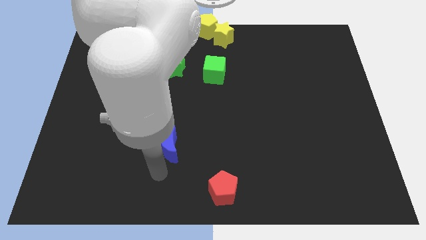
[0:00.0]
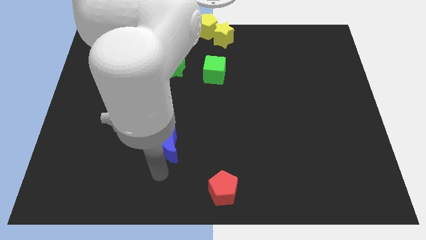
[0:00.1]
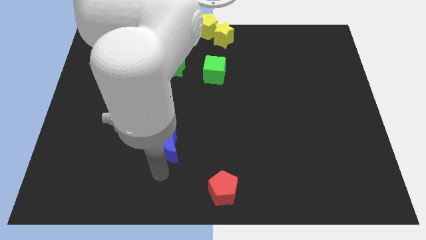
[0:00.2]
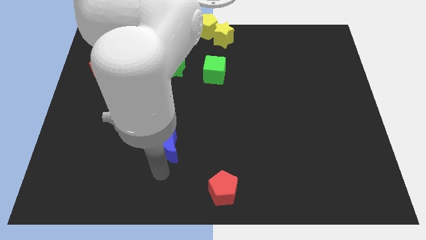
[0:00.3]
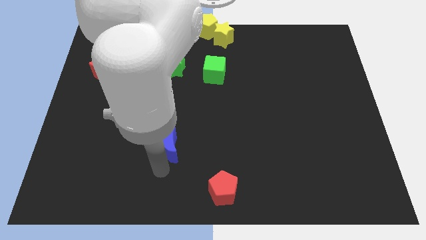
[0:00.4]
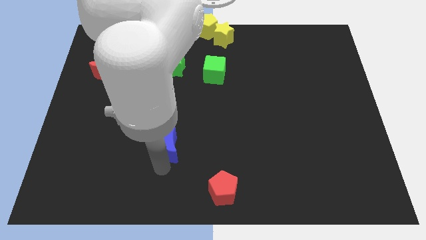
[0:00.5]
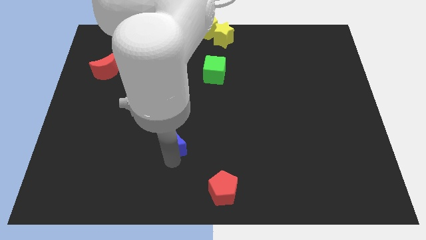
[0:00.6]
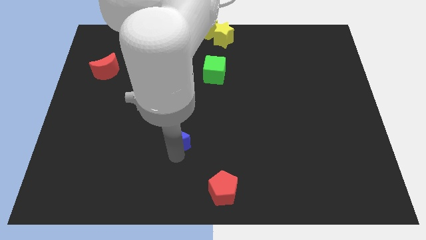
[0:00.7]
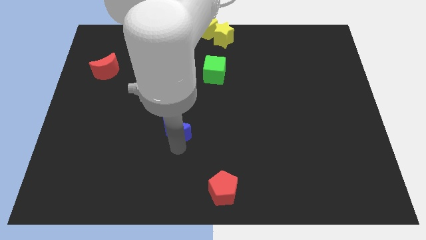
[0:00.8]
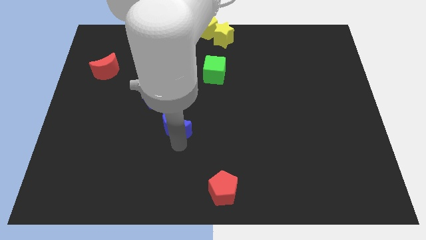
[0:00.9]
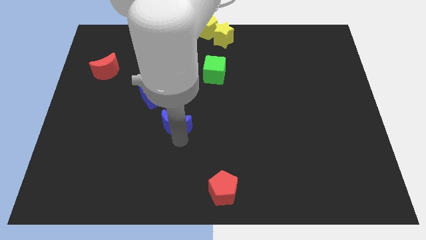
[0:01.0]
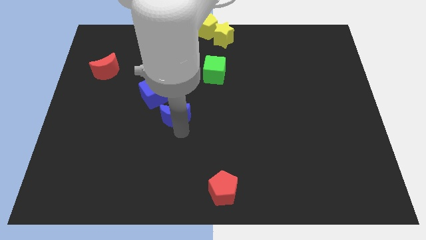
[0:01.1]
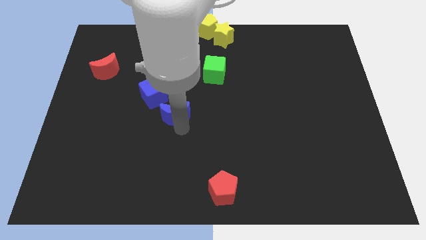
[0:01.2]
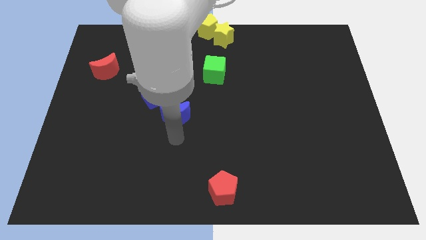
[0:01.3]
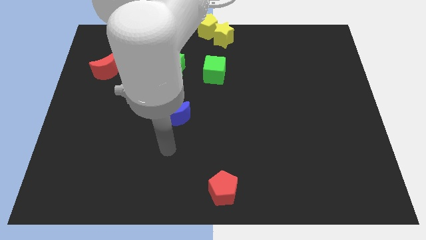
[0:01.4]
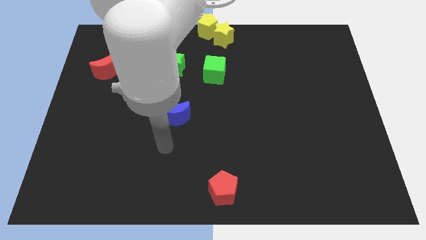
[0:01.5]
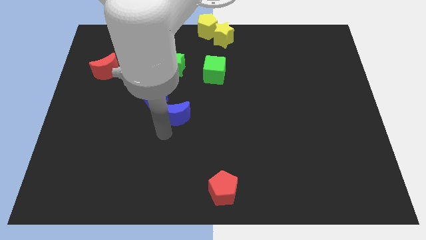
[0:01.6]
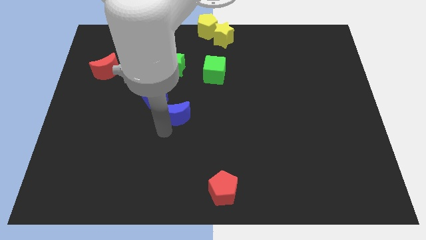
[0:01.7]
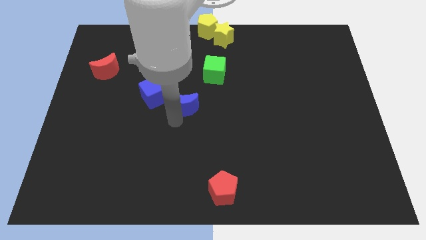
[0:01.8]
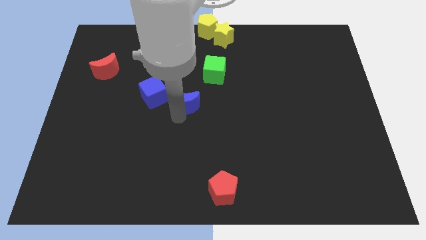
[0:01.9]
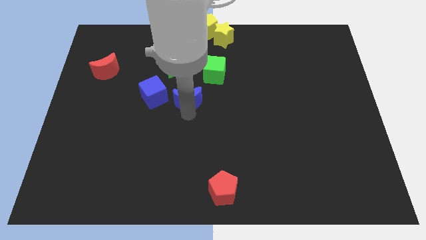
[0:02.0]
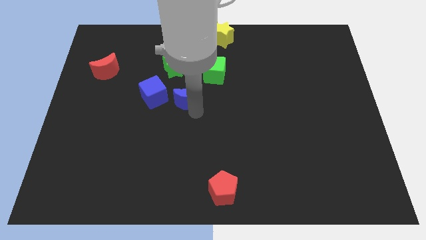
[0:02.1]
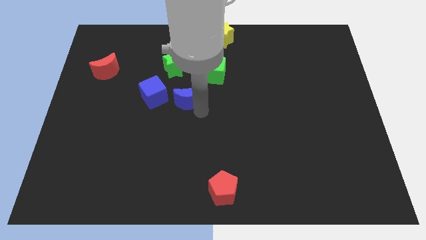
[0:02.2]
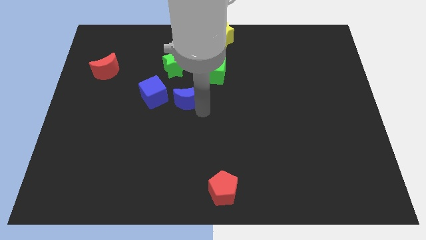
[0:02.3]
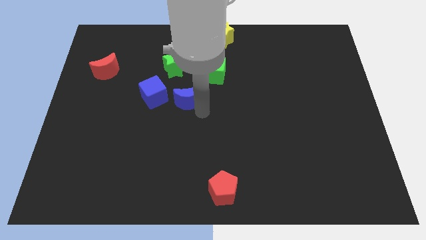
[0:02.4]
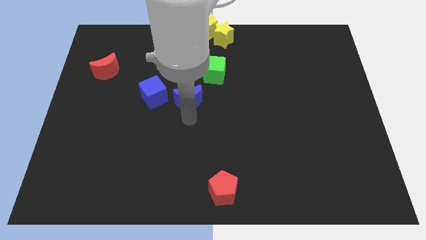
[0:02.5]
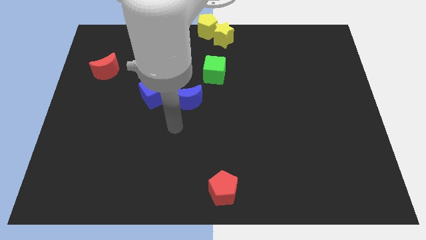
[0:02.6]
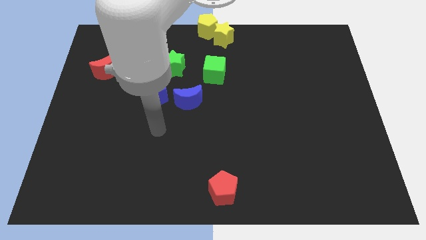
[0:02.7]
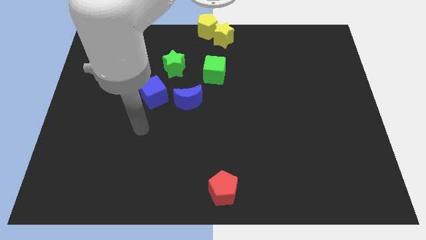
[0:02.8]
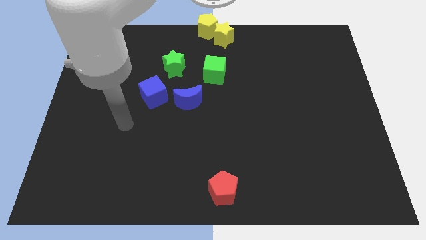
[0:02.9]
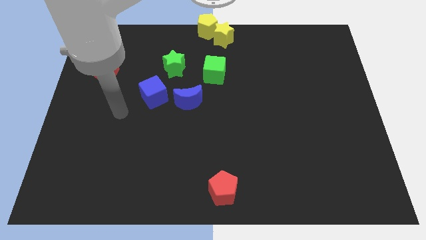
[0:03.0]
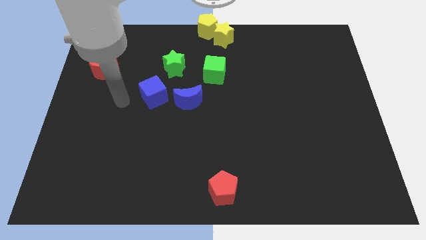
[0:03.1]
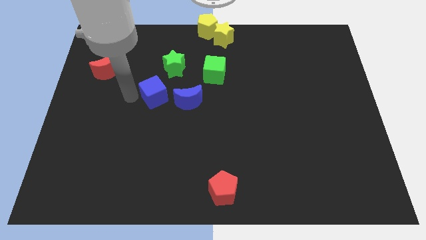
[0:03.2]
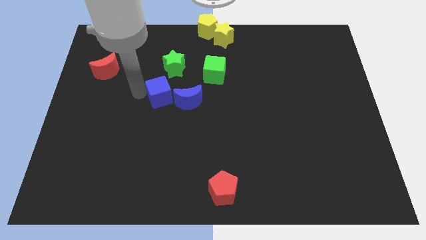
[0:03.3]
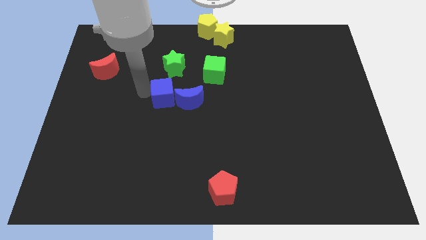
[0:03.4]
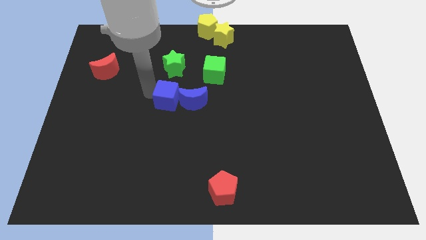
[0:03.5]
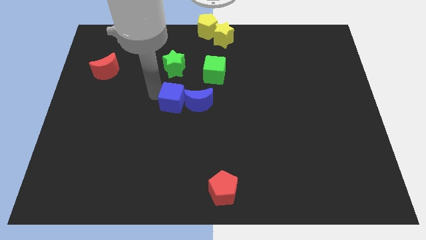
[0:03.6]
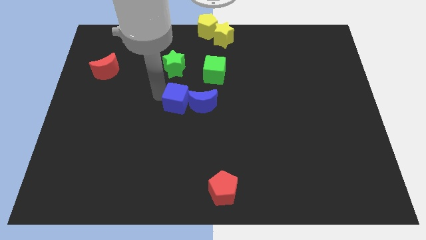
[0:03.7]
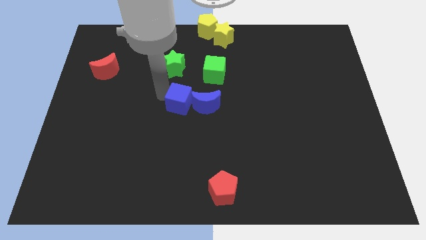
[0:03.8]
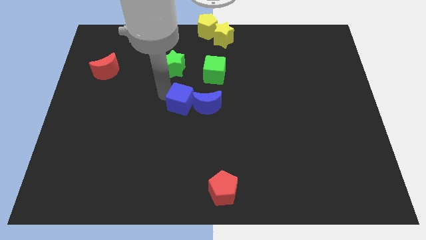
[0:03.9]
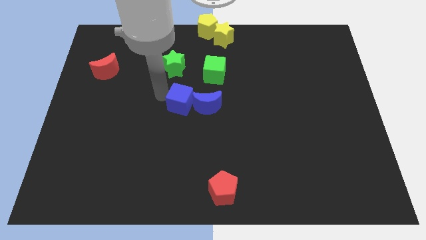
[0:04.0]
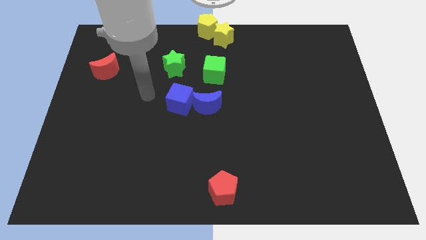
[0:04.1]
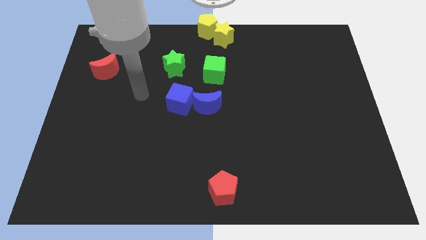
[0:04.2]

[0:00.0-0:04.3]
move the blue blocks towards the centre of the board

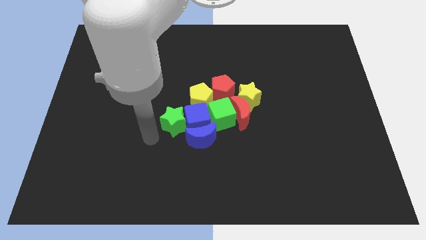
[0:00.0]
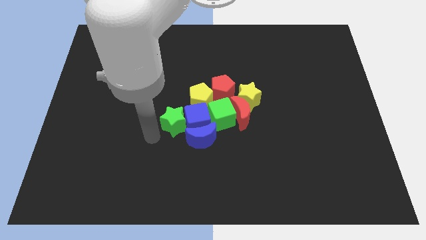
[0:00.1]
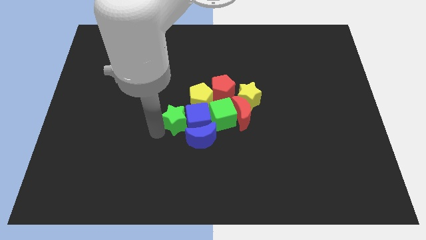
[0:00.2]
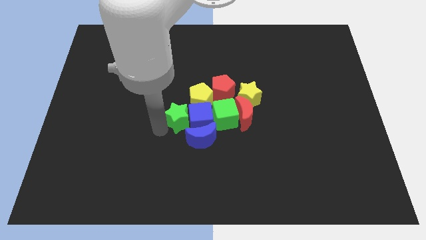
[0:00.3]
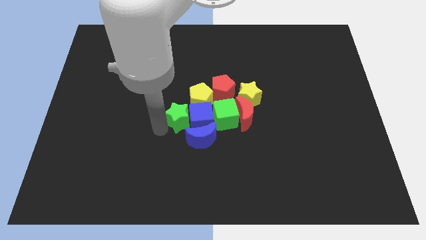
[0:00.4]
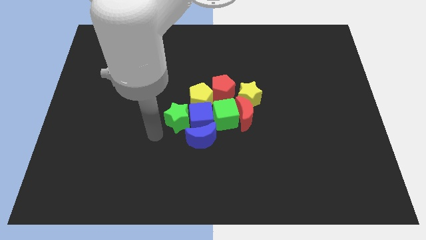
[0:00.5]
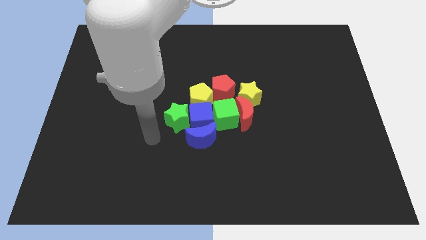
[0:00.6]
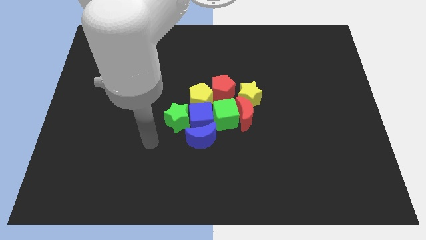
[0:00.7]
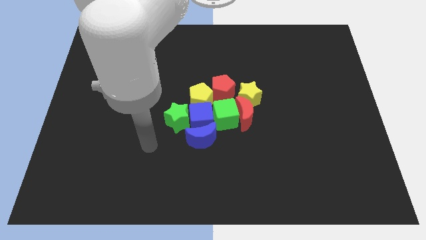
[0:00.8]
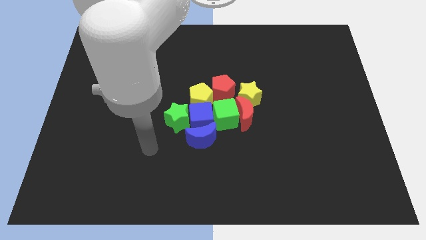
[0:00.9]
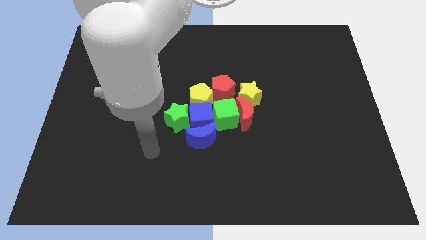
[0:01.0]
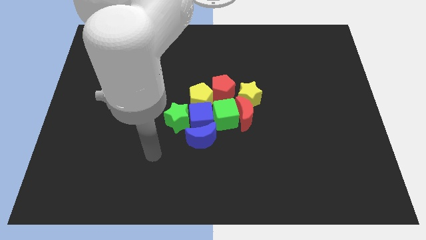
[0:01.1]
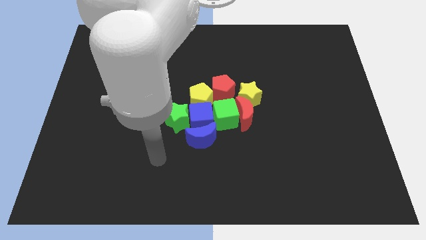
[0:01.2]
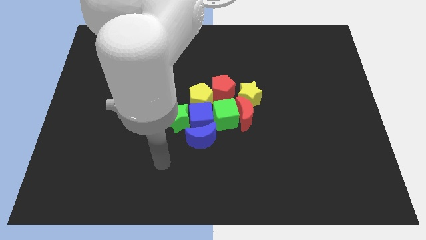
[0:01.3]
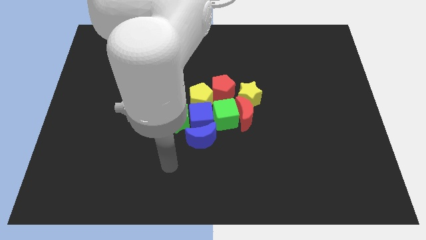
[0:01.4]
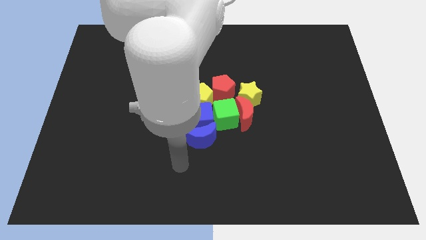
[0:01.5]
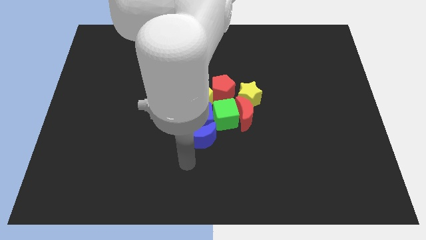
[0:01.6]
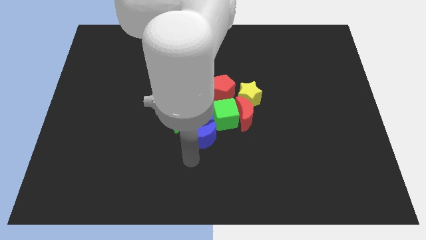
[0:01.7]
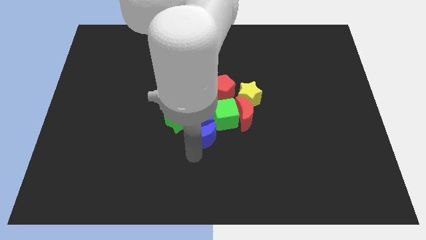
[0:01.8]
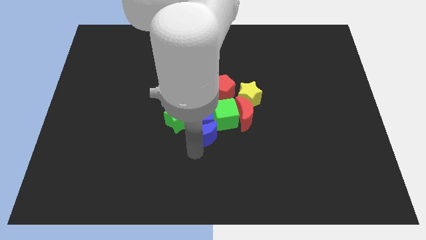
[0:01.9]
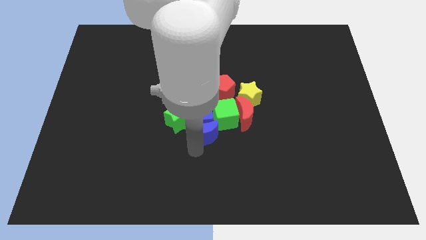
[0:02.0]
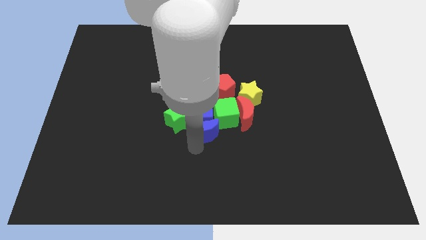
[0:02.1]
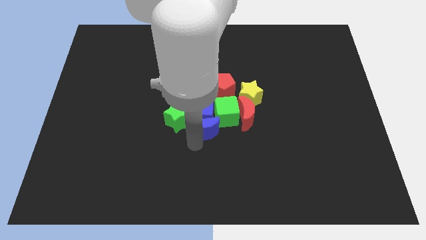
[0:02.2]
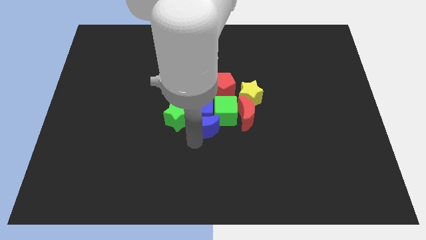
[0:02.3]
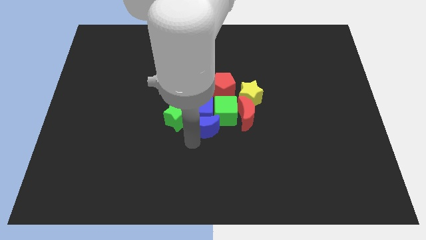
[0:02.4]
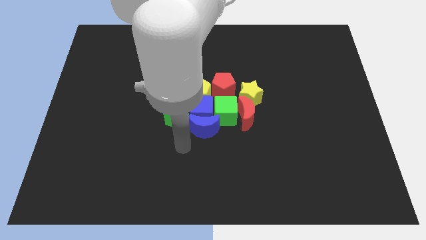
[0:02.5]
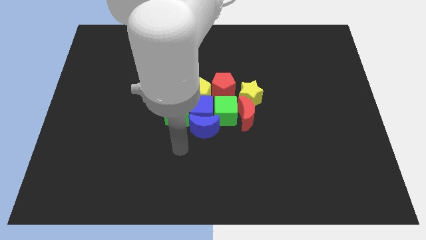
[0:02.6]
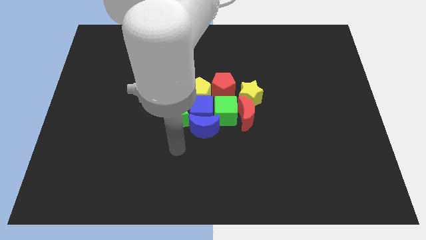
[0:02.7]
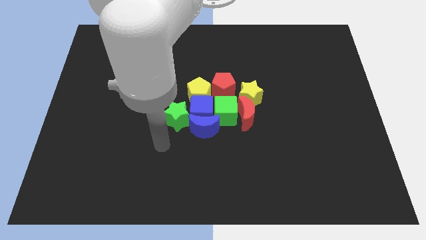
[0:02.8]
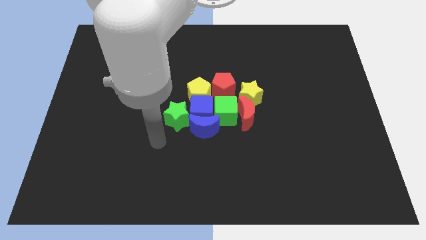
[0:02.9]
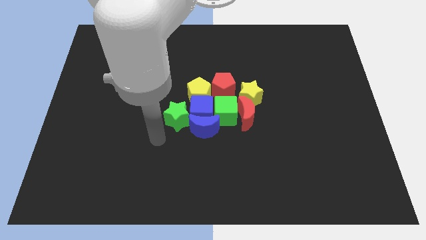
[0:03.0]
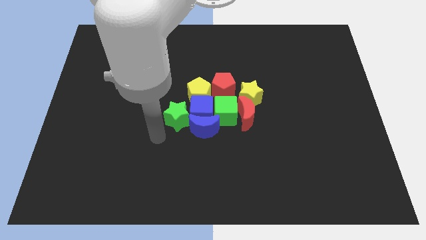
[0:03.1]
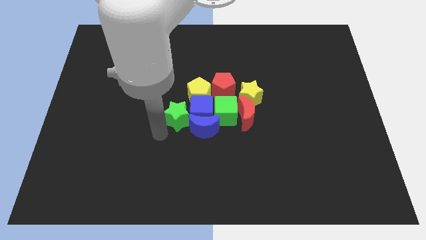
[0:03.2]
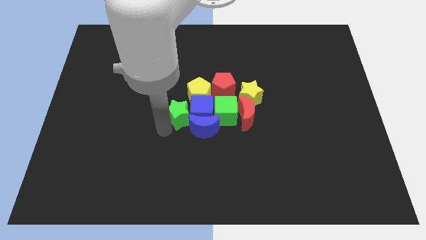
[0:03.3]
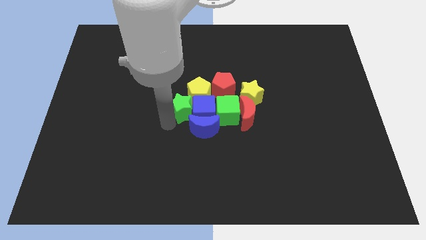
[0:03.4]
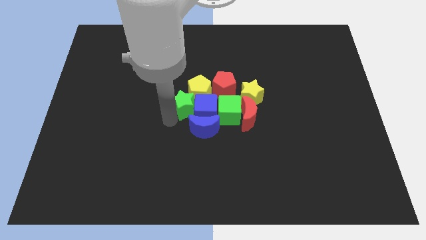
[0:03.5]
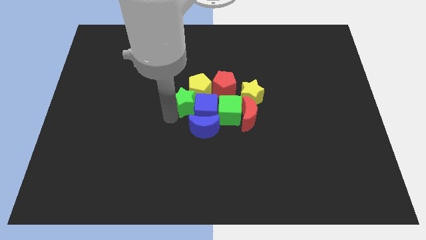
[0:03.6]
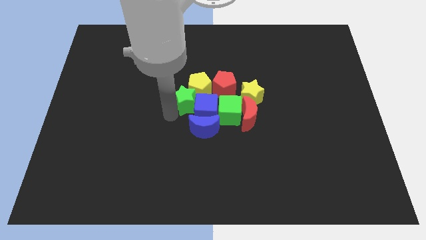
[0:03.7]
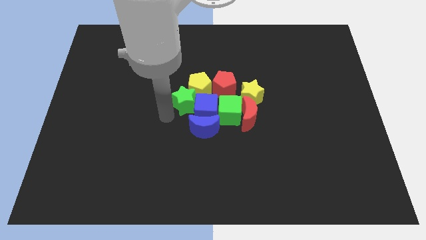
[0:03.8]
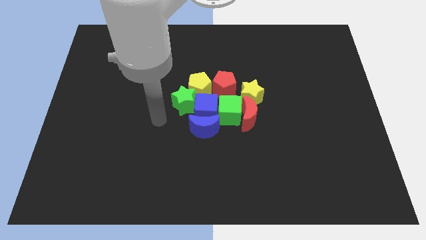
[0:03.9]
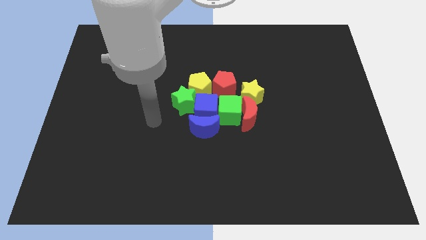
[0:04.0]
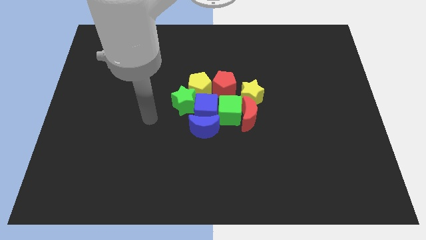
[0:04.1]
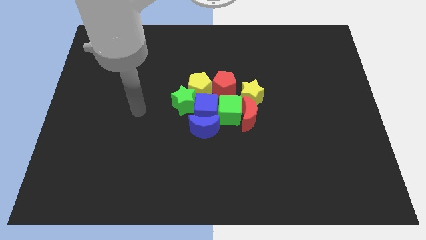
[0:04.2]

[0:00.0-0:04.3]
adjust all the blocks to the center

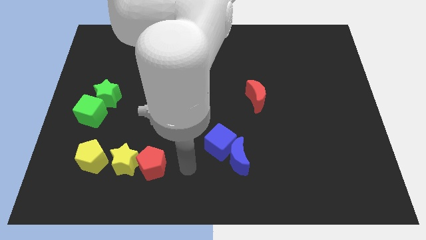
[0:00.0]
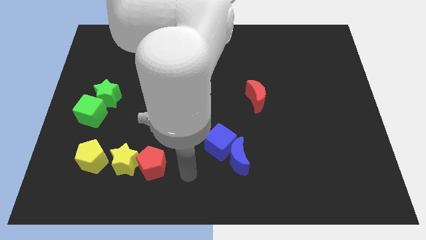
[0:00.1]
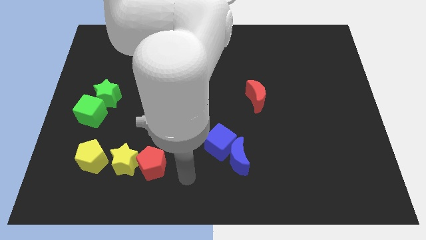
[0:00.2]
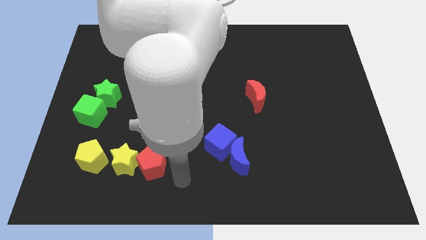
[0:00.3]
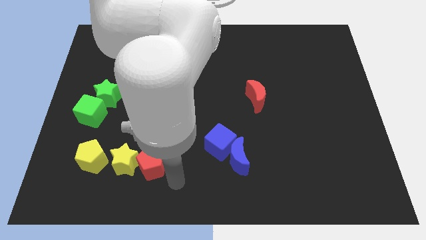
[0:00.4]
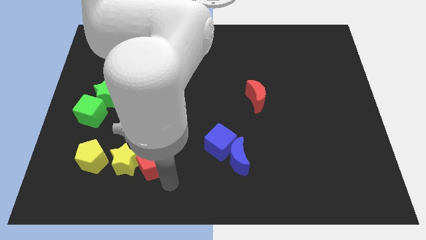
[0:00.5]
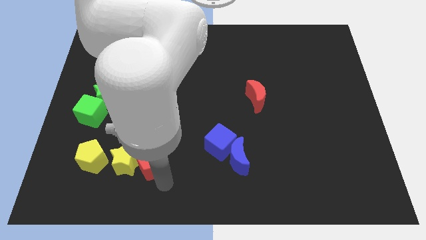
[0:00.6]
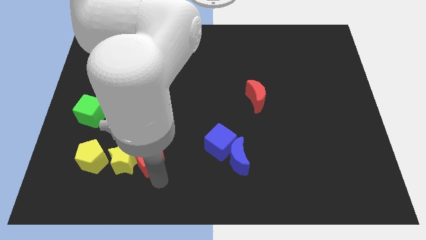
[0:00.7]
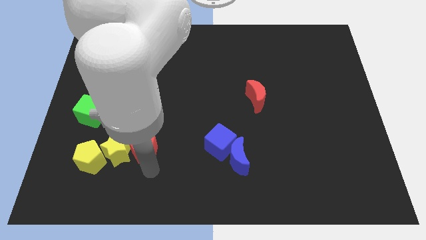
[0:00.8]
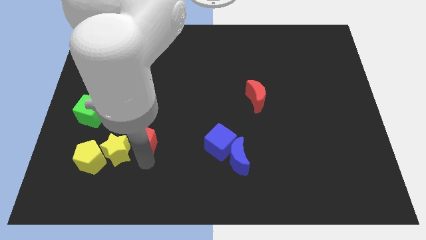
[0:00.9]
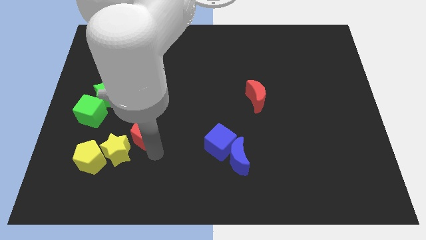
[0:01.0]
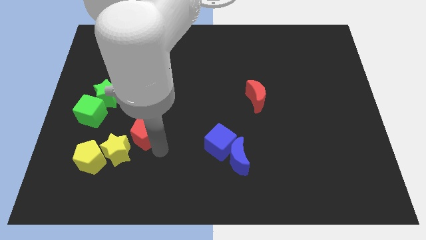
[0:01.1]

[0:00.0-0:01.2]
move the red pentagon up
